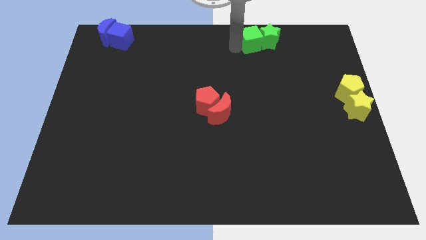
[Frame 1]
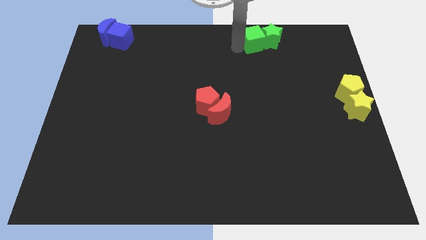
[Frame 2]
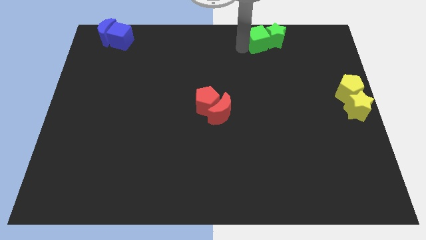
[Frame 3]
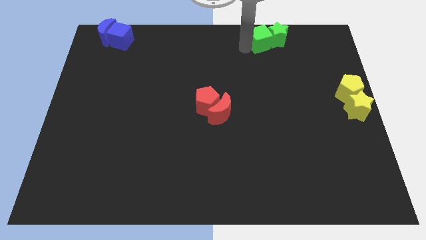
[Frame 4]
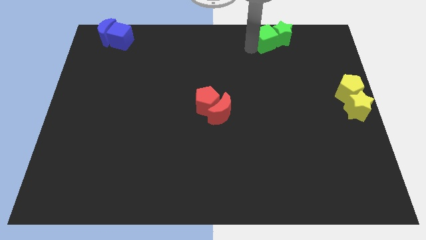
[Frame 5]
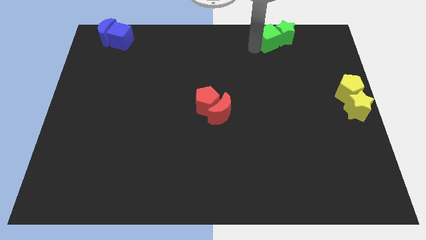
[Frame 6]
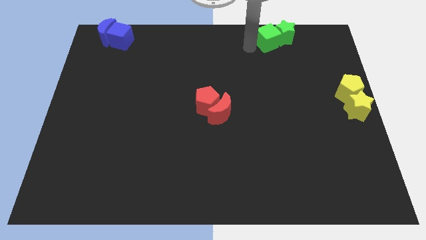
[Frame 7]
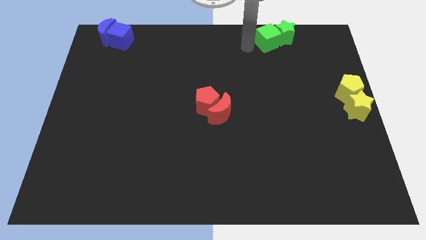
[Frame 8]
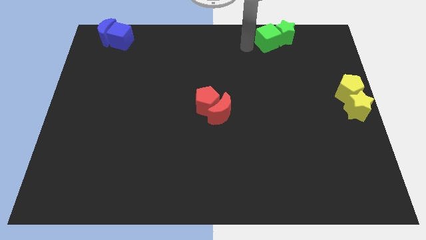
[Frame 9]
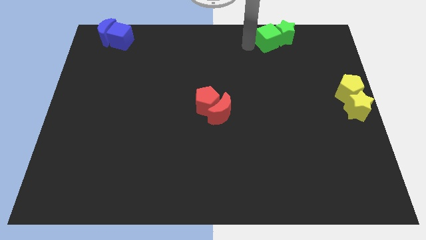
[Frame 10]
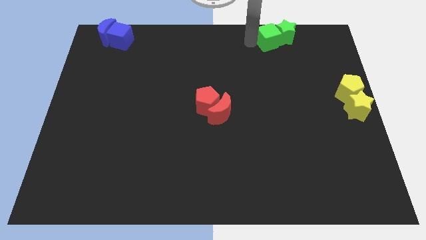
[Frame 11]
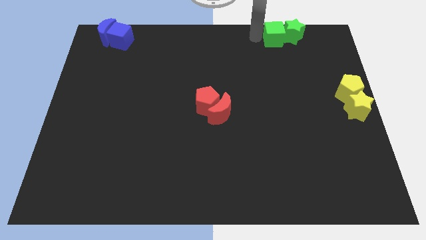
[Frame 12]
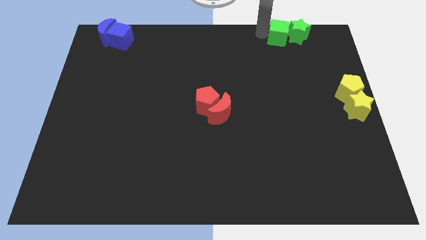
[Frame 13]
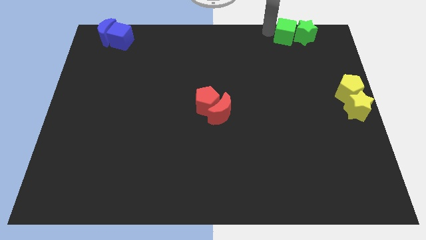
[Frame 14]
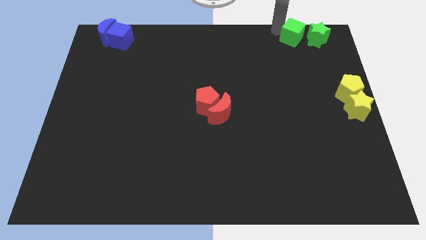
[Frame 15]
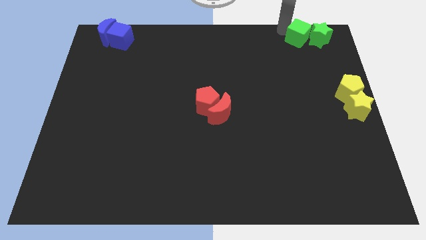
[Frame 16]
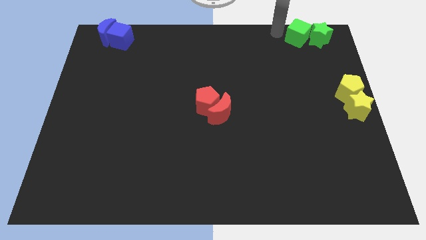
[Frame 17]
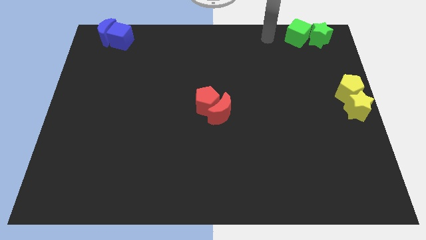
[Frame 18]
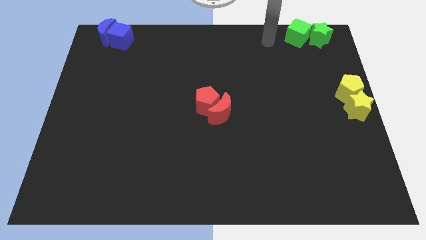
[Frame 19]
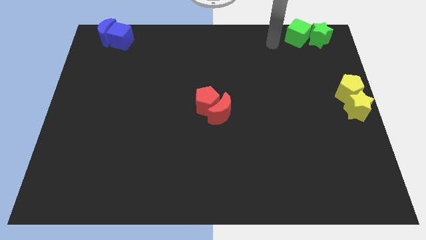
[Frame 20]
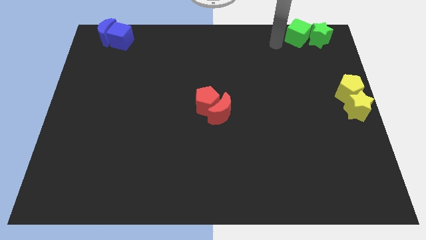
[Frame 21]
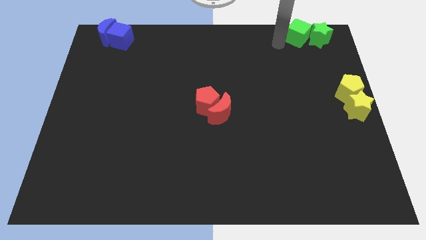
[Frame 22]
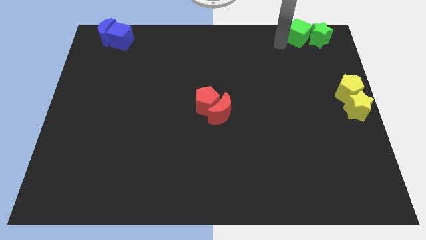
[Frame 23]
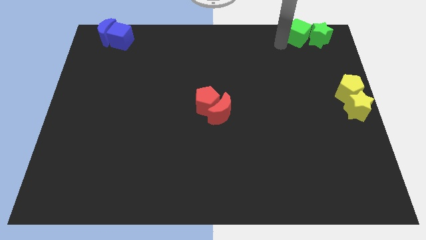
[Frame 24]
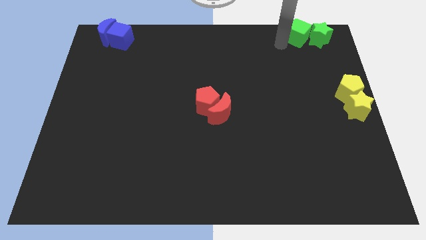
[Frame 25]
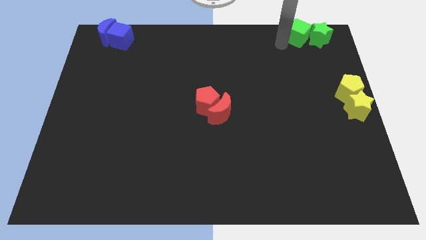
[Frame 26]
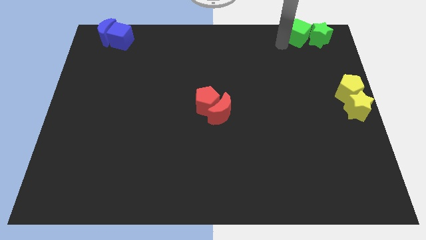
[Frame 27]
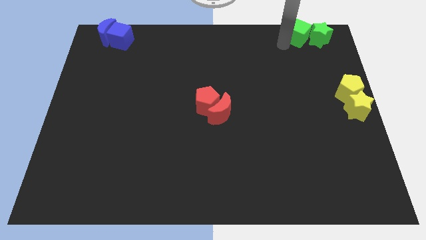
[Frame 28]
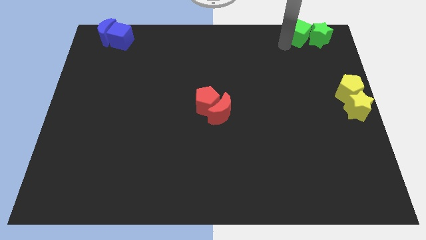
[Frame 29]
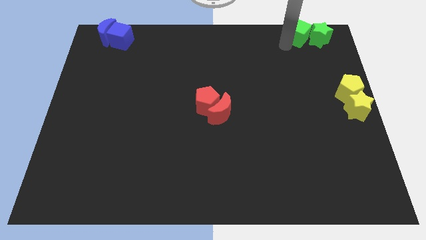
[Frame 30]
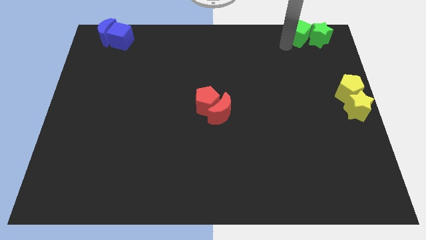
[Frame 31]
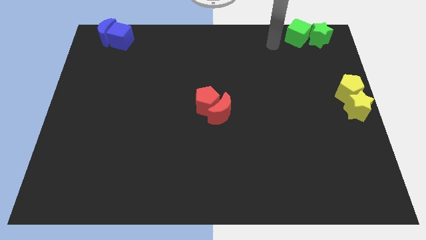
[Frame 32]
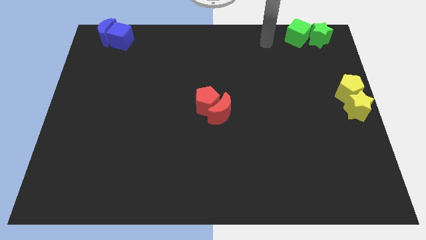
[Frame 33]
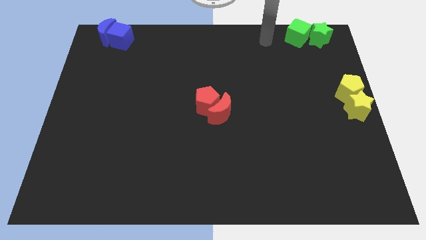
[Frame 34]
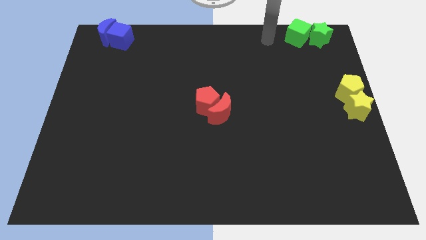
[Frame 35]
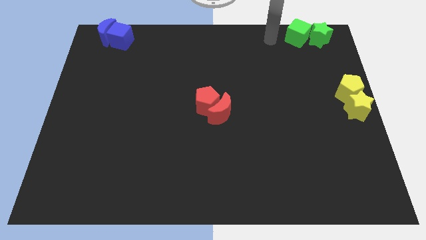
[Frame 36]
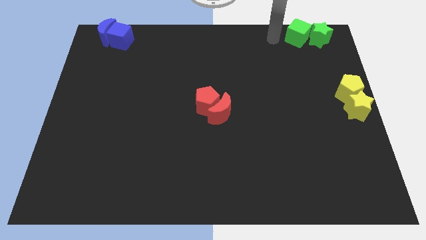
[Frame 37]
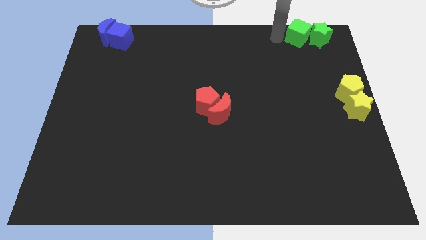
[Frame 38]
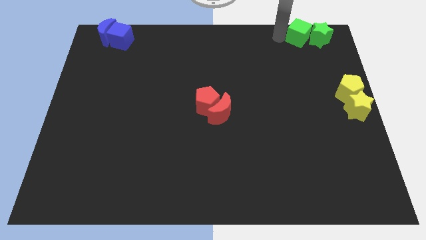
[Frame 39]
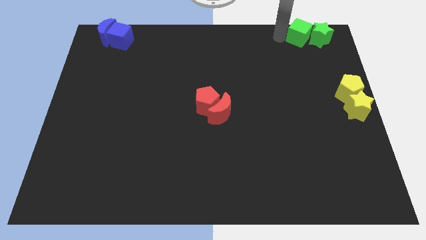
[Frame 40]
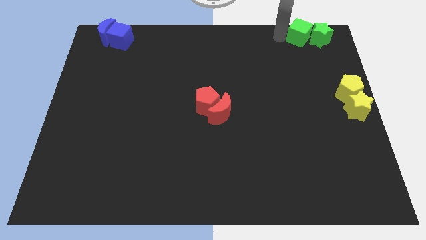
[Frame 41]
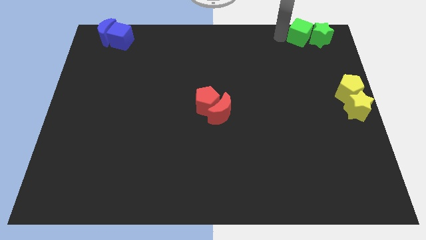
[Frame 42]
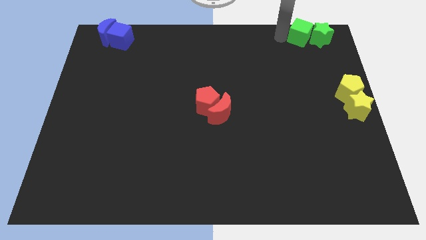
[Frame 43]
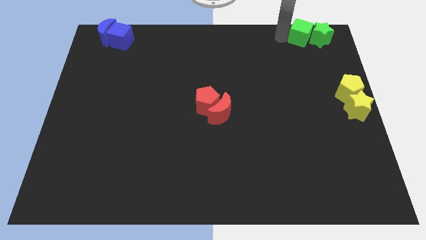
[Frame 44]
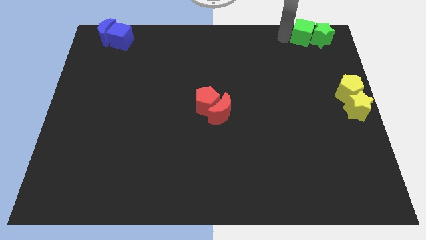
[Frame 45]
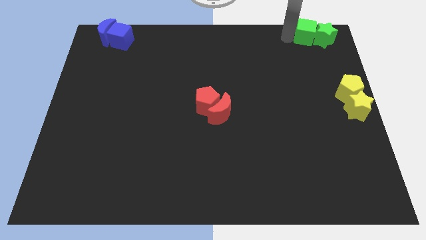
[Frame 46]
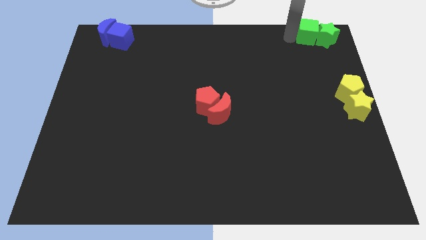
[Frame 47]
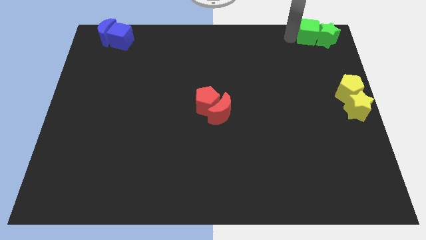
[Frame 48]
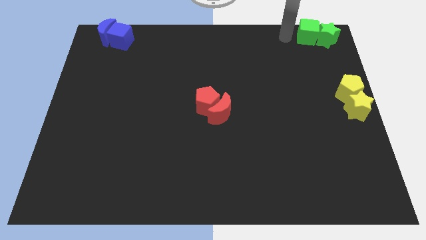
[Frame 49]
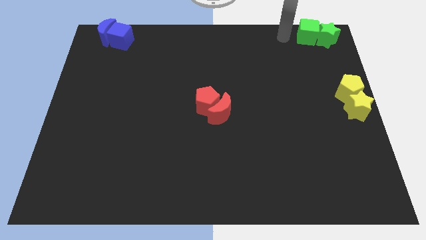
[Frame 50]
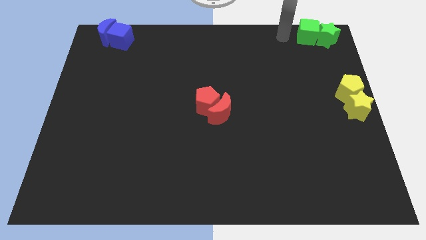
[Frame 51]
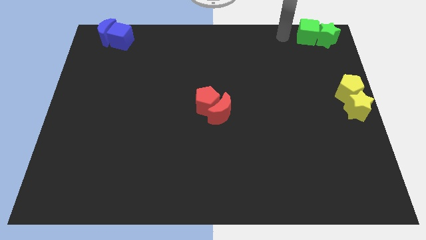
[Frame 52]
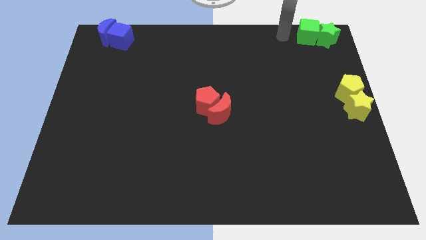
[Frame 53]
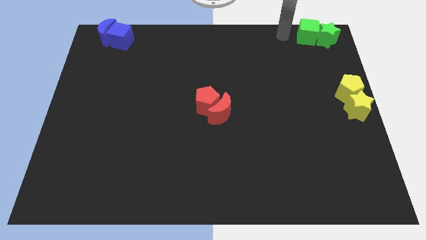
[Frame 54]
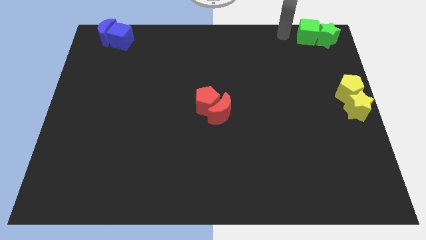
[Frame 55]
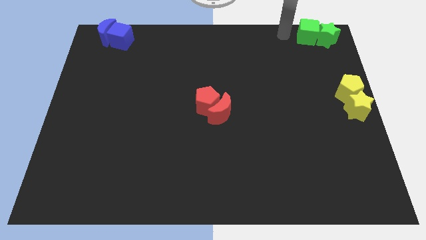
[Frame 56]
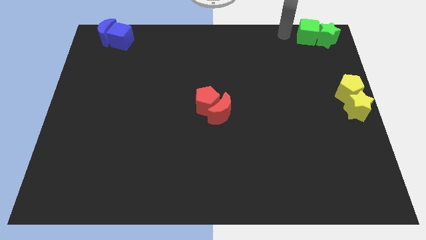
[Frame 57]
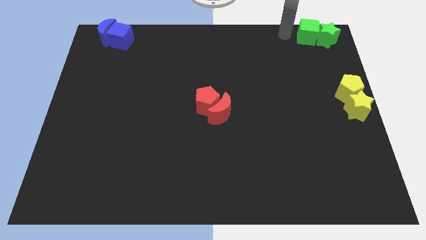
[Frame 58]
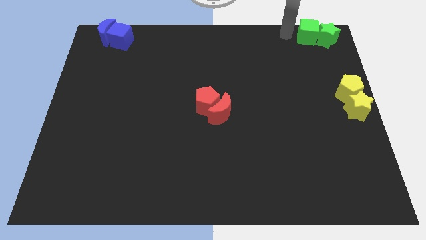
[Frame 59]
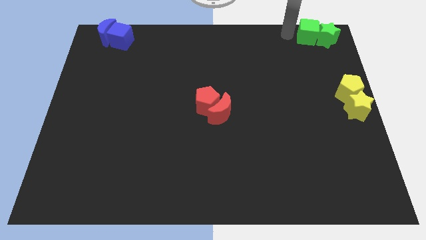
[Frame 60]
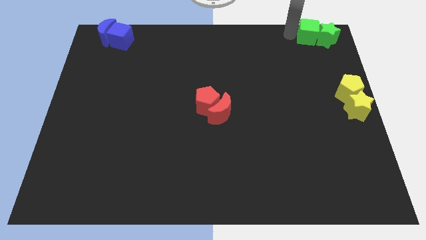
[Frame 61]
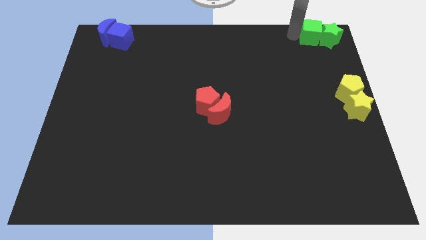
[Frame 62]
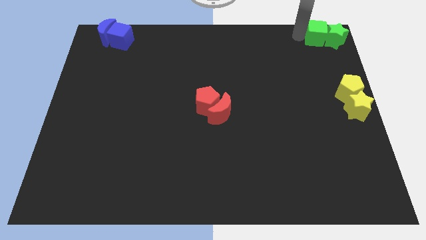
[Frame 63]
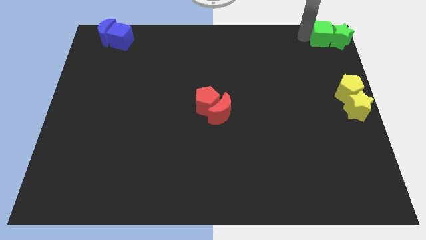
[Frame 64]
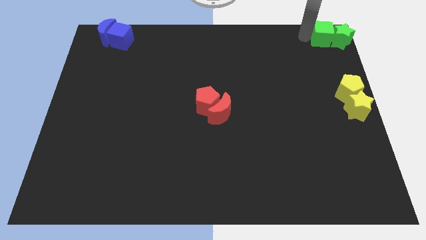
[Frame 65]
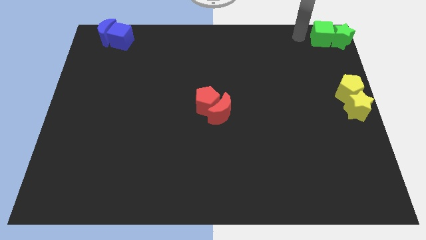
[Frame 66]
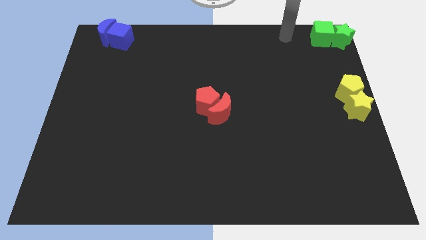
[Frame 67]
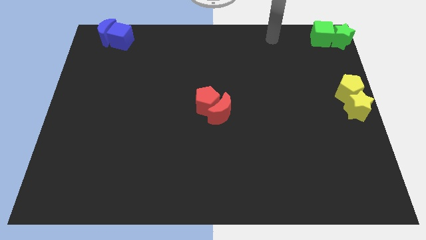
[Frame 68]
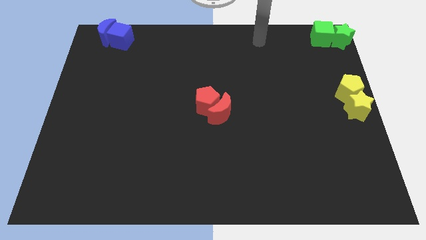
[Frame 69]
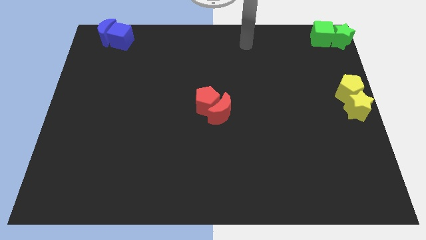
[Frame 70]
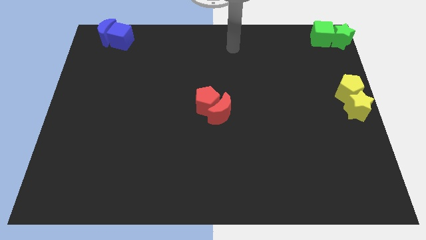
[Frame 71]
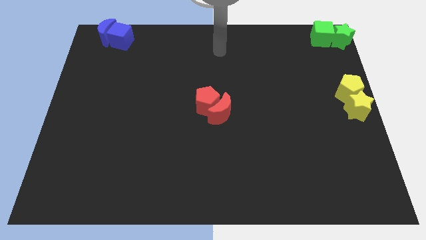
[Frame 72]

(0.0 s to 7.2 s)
push the green cube into the green star to the top right corner

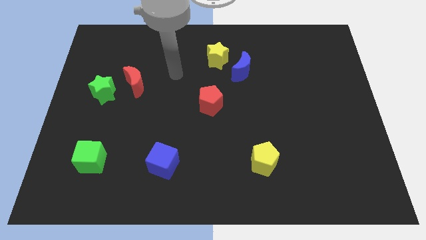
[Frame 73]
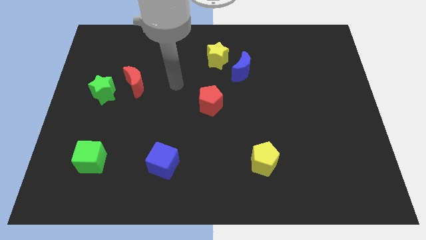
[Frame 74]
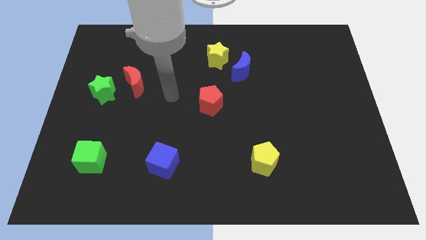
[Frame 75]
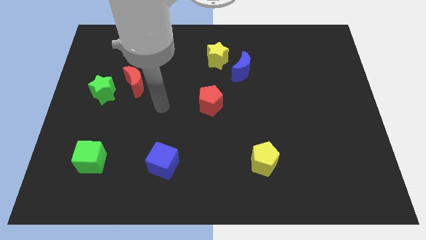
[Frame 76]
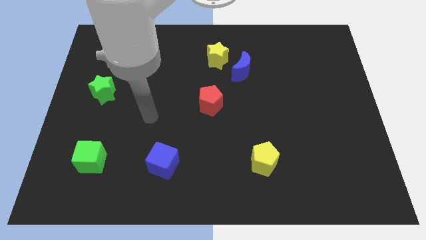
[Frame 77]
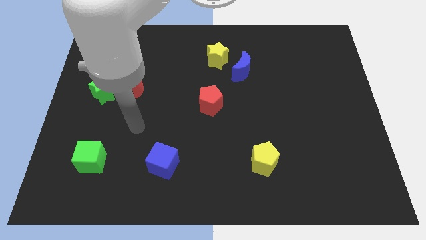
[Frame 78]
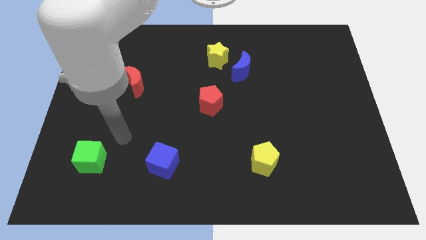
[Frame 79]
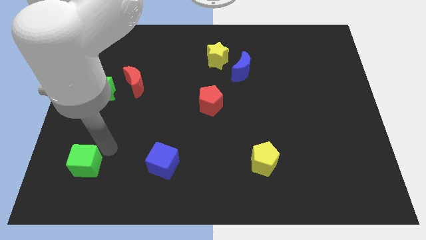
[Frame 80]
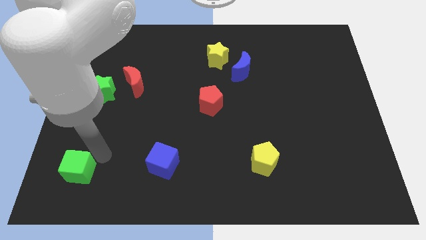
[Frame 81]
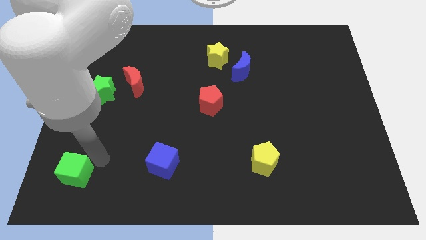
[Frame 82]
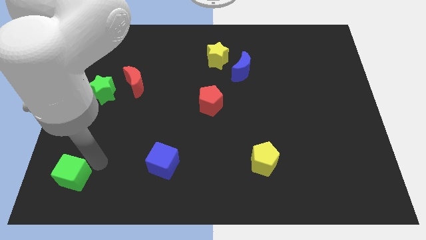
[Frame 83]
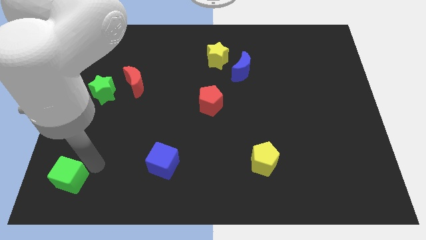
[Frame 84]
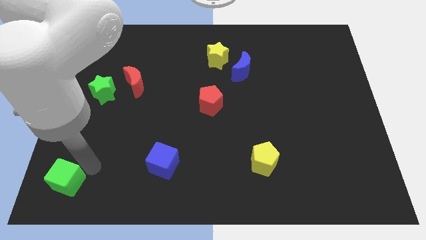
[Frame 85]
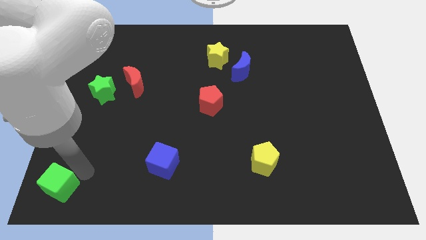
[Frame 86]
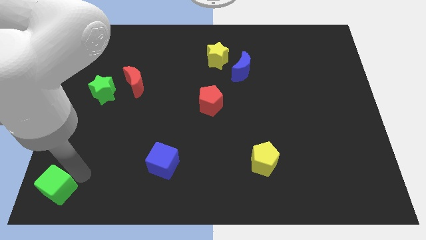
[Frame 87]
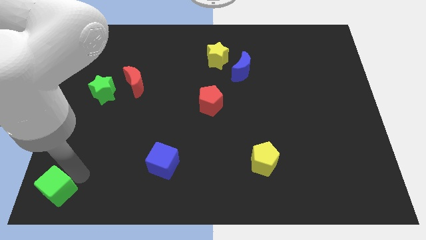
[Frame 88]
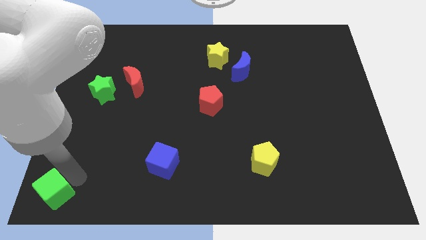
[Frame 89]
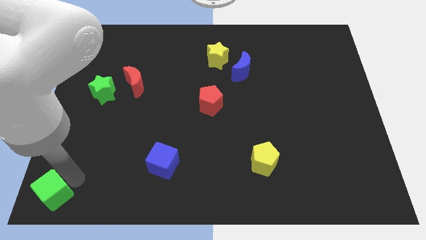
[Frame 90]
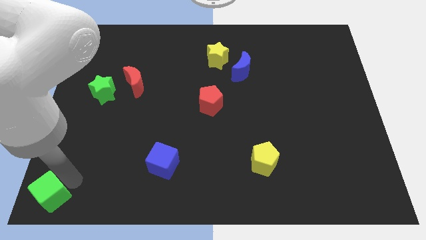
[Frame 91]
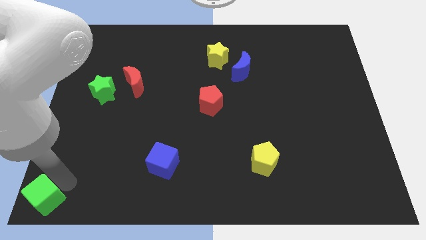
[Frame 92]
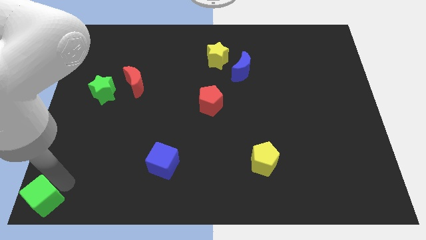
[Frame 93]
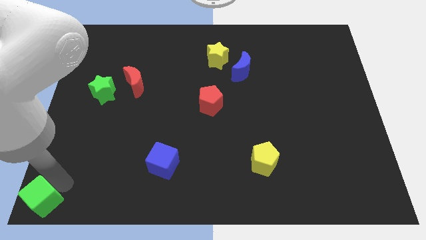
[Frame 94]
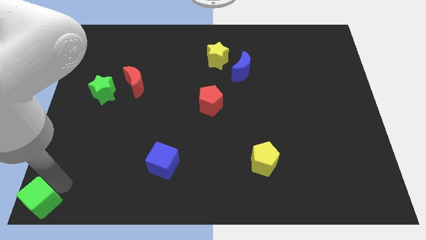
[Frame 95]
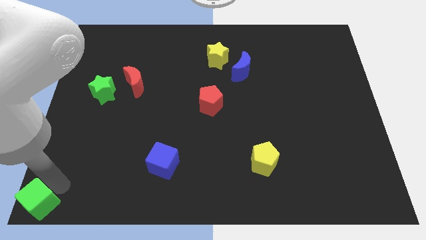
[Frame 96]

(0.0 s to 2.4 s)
push green cube to the bottom left corner of the board
